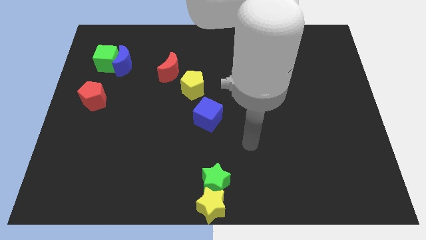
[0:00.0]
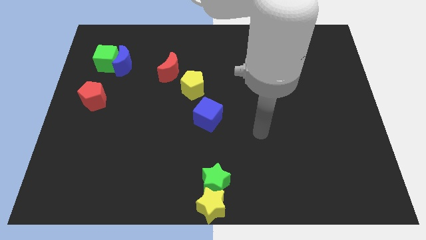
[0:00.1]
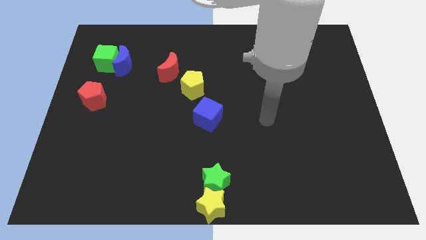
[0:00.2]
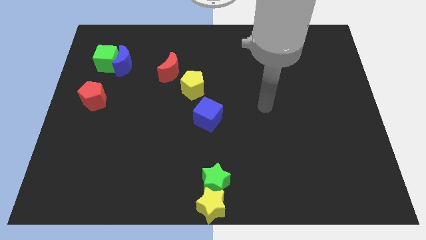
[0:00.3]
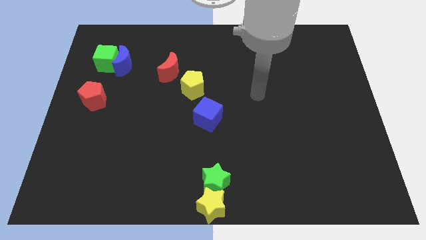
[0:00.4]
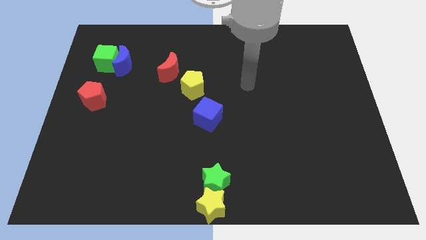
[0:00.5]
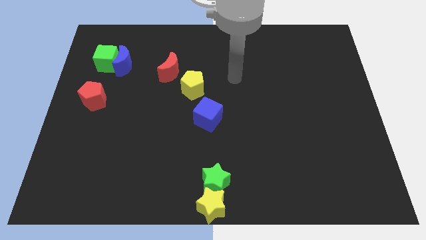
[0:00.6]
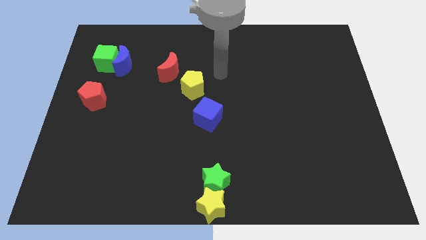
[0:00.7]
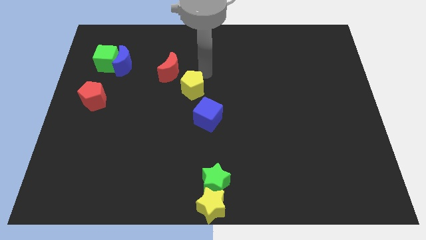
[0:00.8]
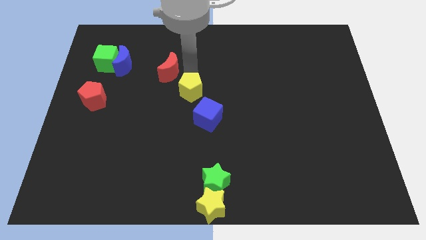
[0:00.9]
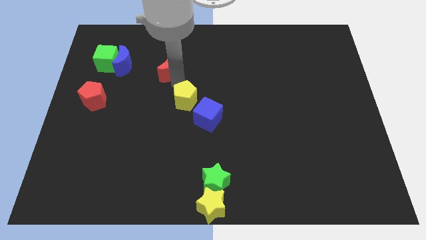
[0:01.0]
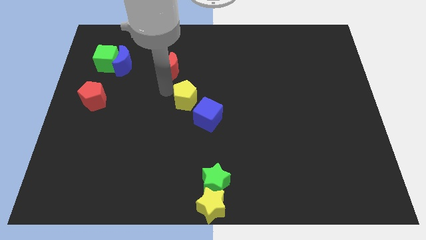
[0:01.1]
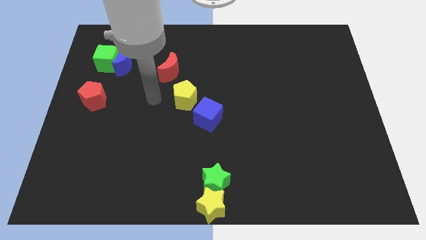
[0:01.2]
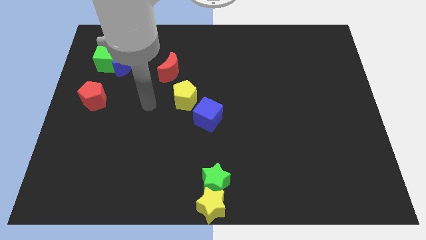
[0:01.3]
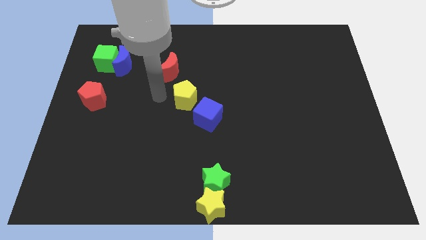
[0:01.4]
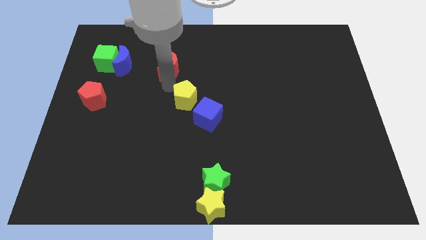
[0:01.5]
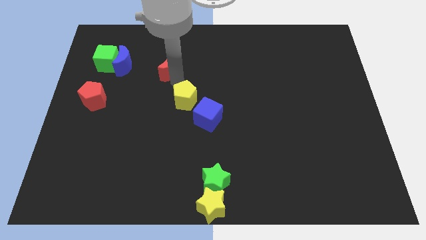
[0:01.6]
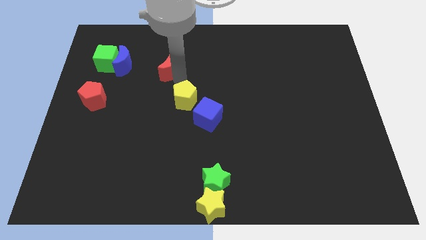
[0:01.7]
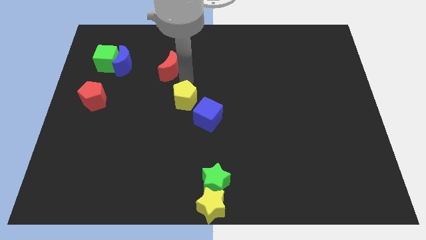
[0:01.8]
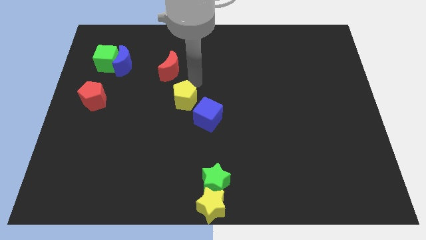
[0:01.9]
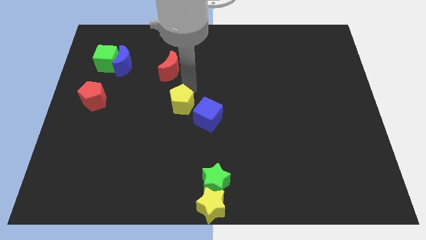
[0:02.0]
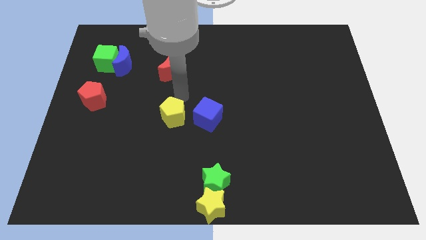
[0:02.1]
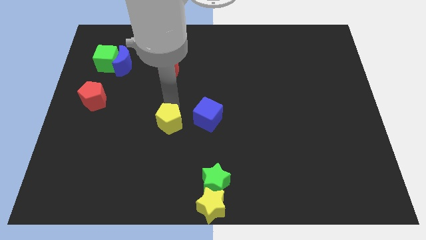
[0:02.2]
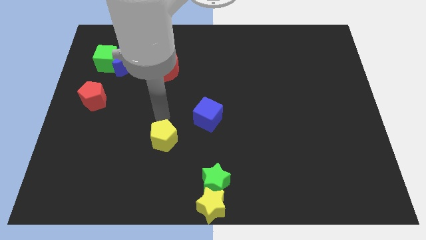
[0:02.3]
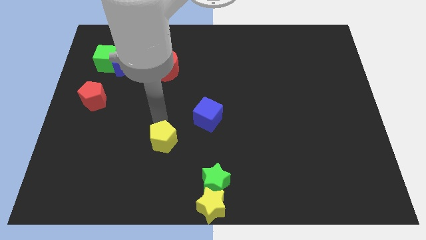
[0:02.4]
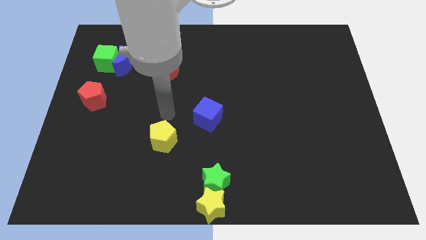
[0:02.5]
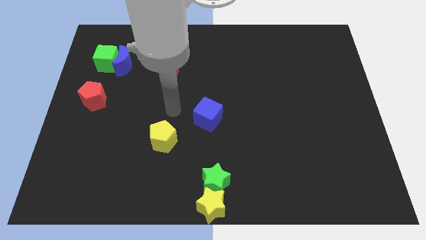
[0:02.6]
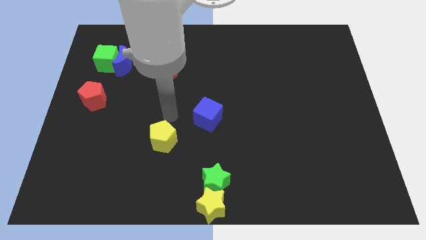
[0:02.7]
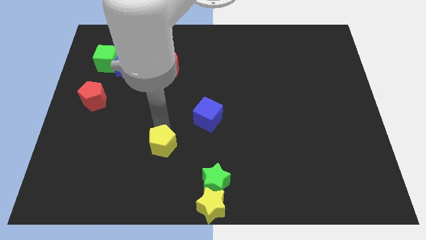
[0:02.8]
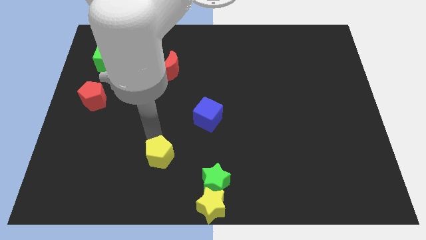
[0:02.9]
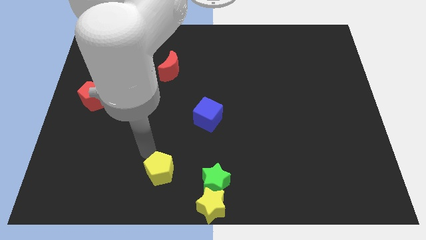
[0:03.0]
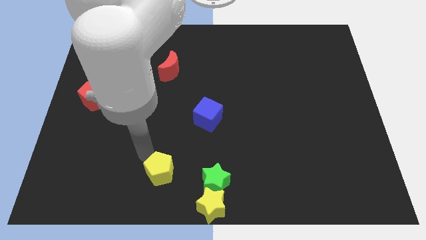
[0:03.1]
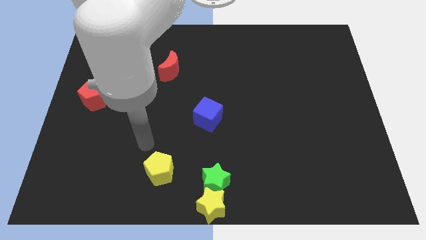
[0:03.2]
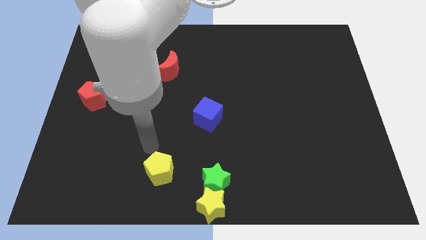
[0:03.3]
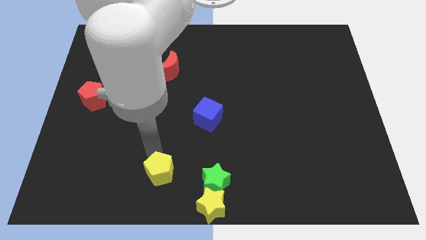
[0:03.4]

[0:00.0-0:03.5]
move the yellow pentagon left to the green star

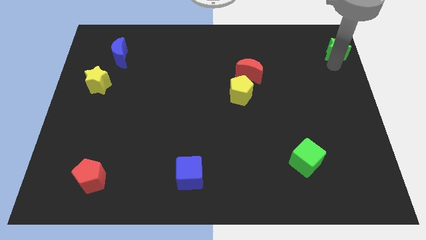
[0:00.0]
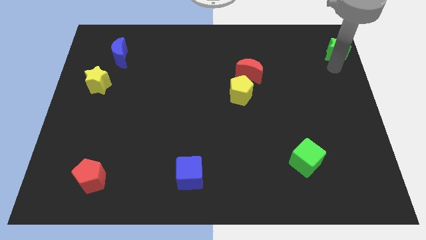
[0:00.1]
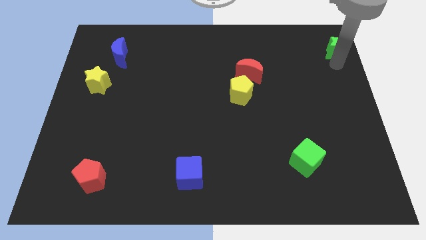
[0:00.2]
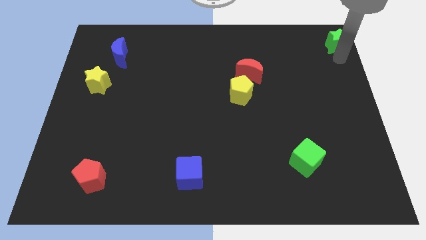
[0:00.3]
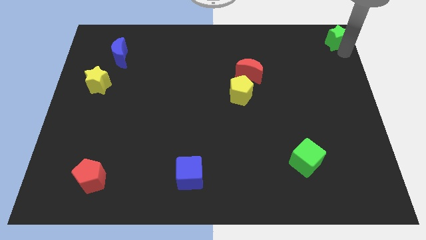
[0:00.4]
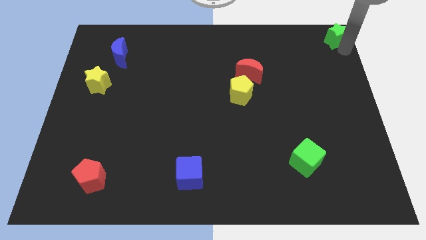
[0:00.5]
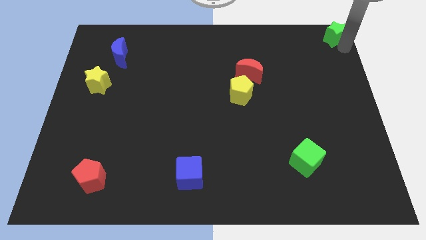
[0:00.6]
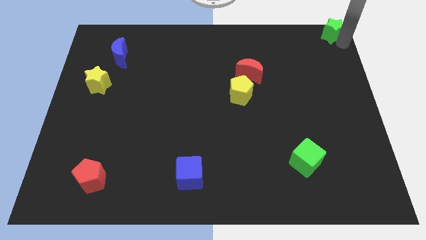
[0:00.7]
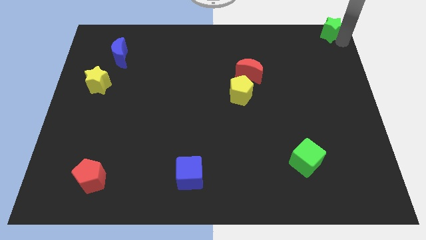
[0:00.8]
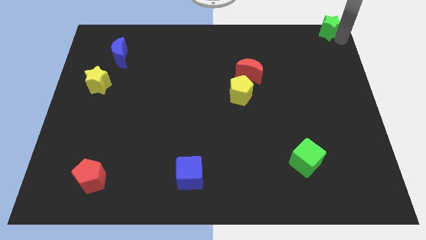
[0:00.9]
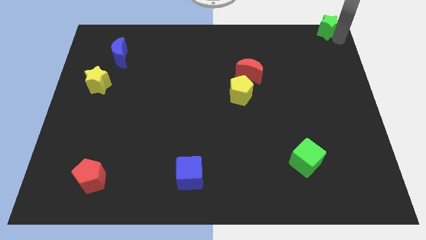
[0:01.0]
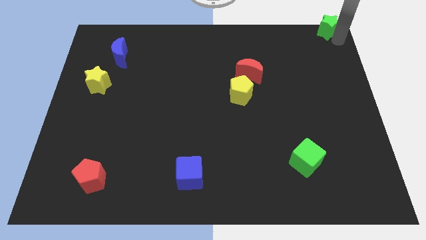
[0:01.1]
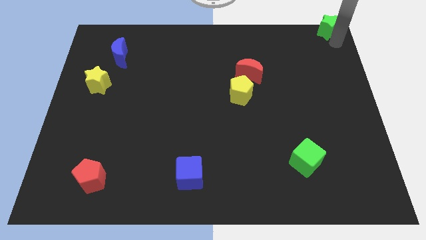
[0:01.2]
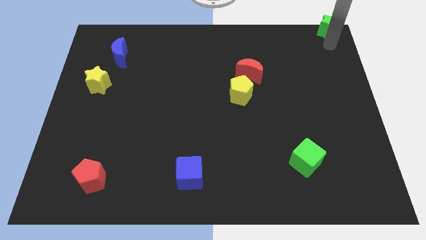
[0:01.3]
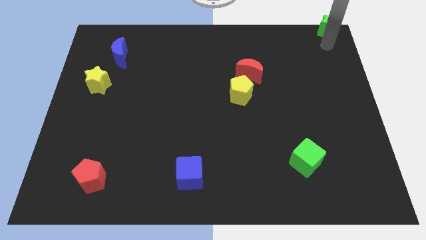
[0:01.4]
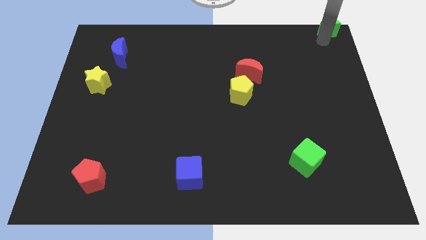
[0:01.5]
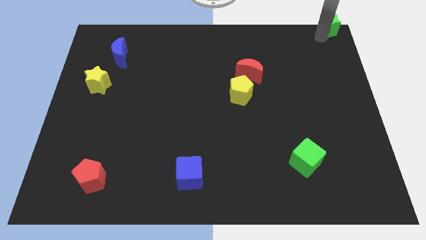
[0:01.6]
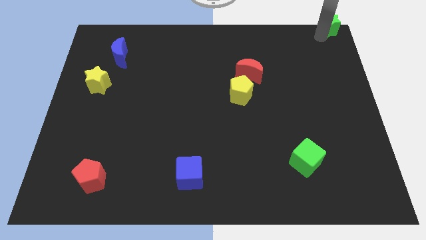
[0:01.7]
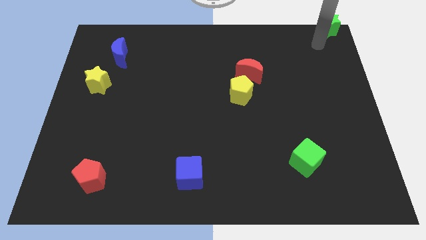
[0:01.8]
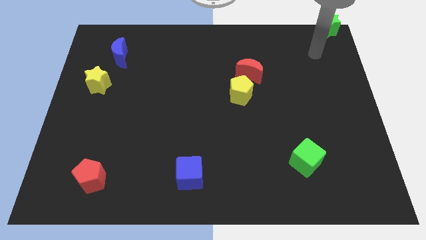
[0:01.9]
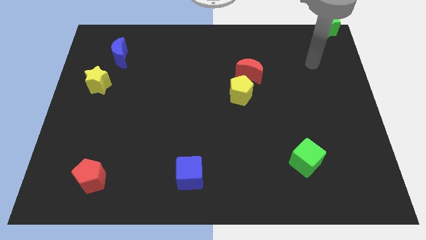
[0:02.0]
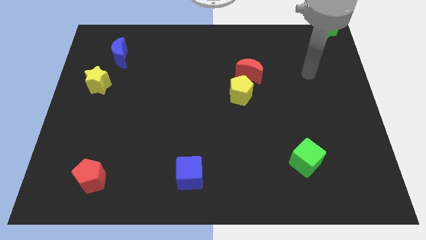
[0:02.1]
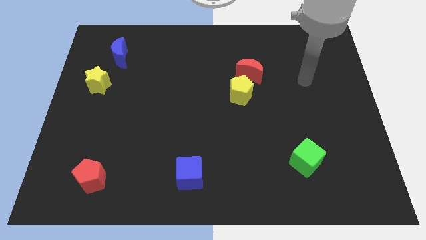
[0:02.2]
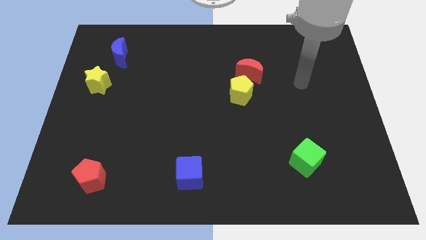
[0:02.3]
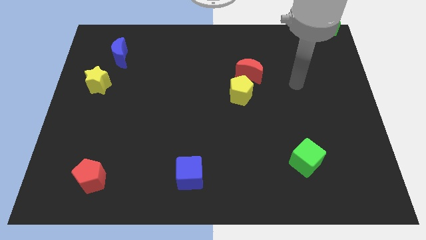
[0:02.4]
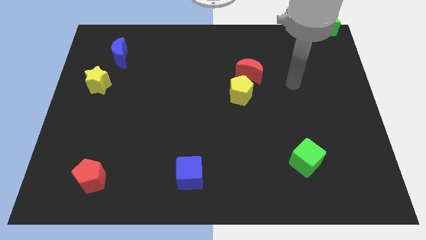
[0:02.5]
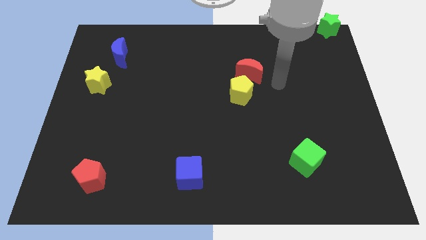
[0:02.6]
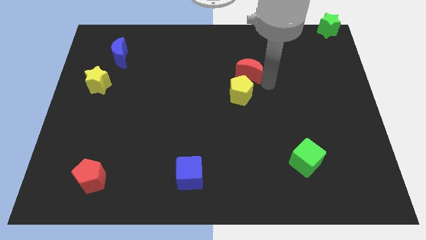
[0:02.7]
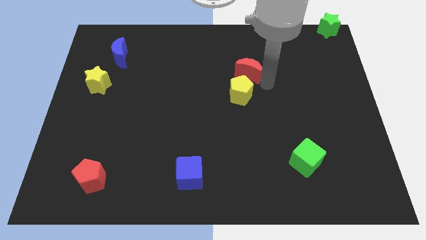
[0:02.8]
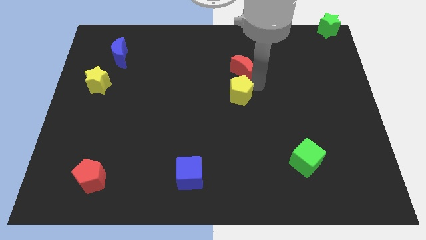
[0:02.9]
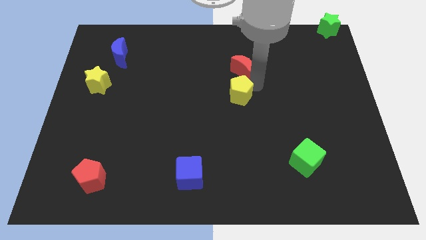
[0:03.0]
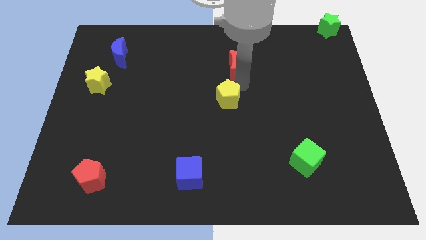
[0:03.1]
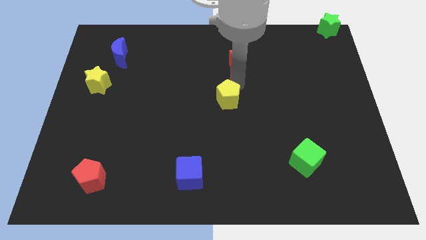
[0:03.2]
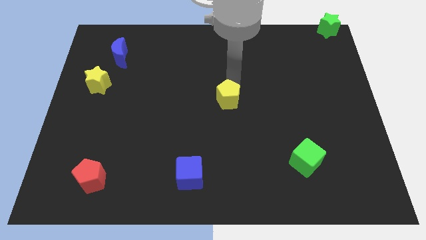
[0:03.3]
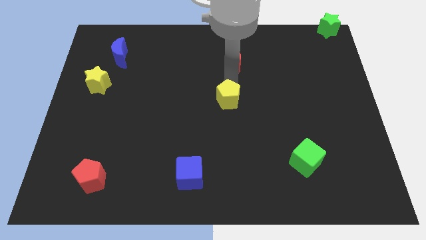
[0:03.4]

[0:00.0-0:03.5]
slightly push the red moon to the left side

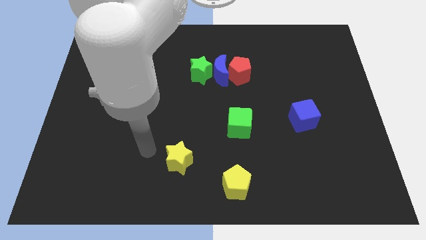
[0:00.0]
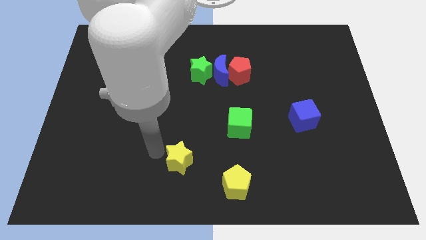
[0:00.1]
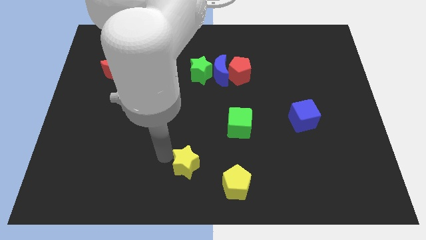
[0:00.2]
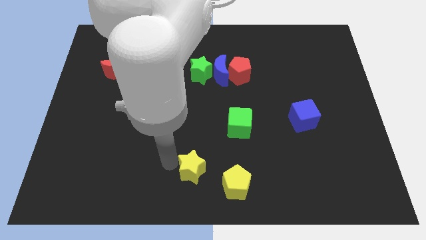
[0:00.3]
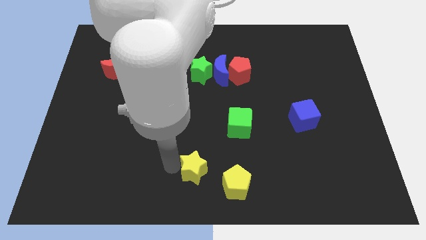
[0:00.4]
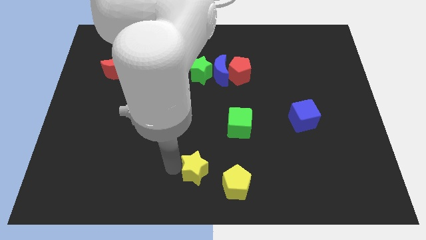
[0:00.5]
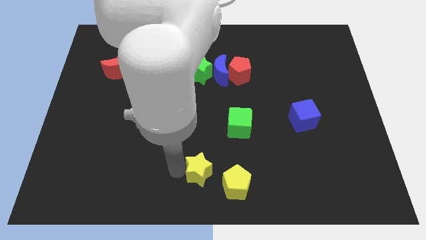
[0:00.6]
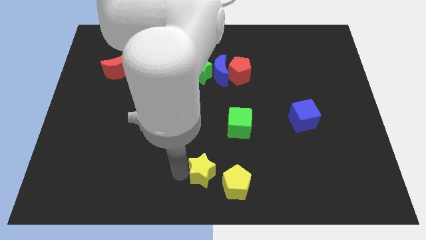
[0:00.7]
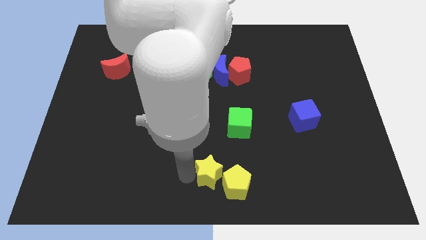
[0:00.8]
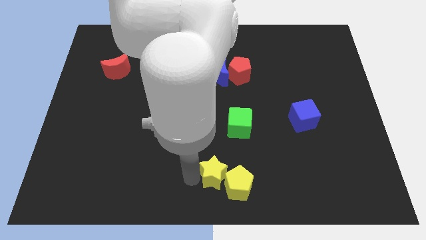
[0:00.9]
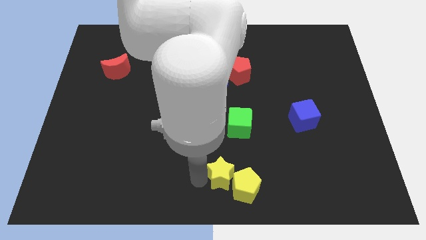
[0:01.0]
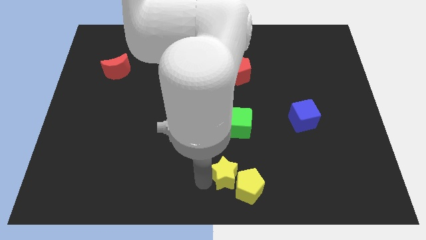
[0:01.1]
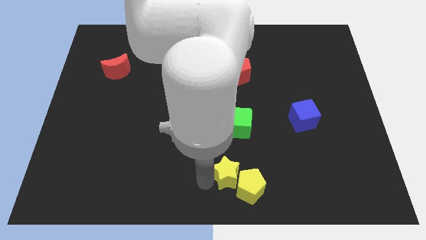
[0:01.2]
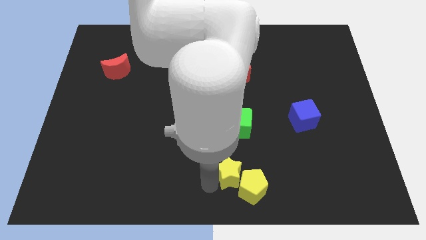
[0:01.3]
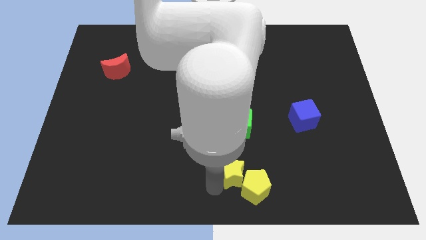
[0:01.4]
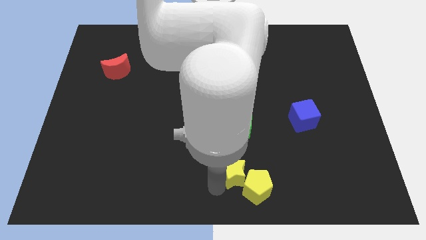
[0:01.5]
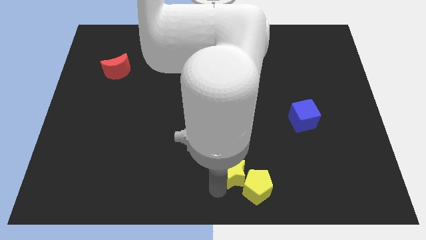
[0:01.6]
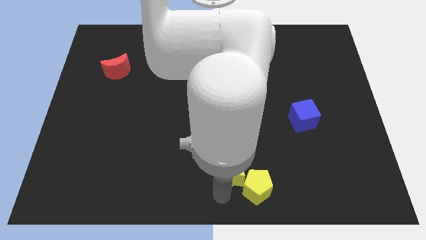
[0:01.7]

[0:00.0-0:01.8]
push the yellow star into yellow pentagon
